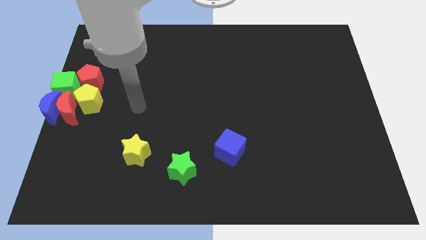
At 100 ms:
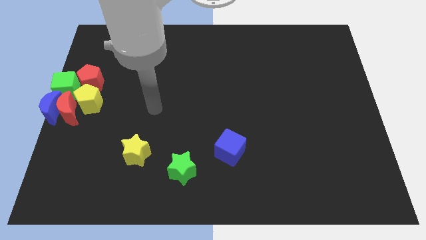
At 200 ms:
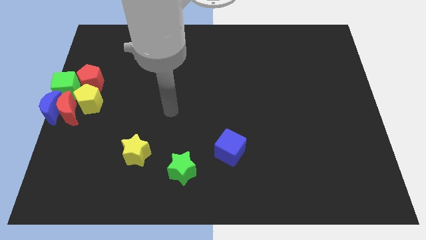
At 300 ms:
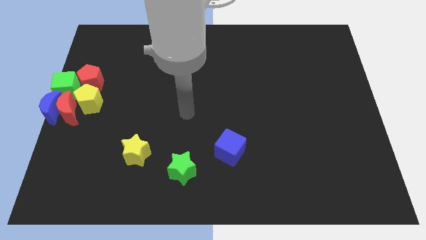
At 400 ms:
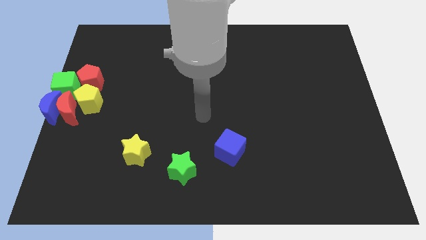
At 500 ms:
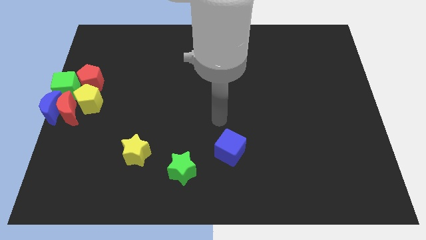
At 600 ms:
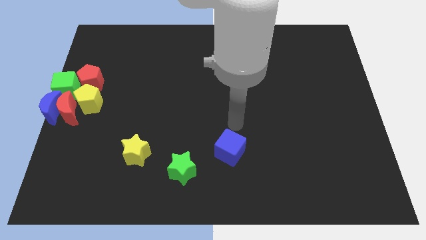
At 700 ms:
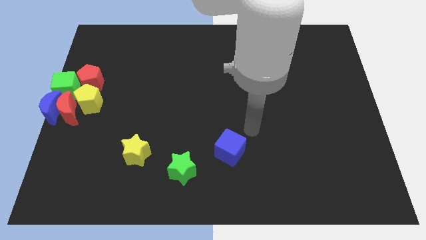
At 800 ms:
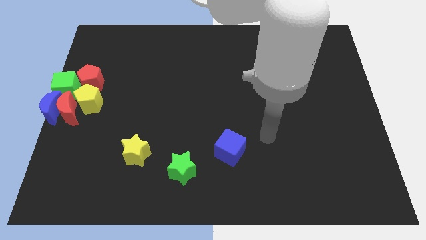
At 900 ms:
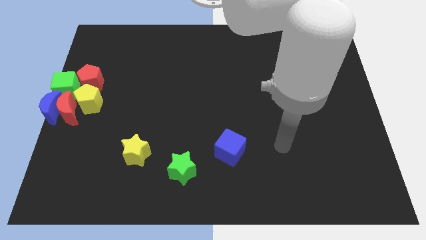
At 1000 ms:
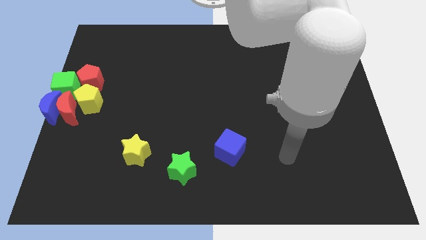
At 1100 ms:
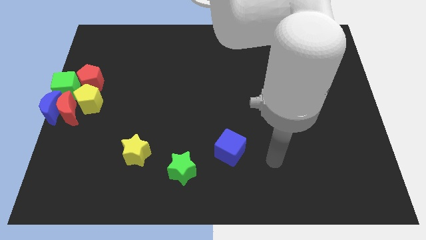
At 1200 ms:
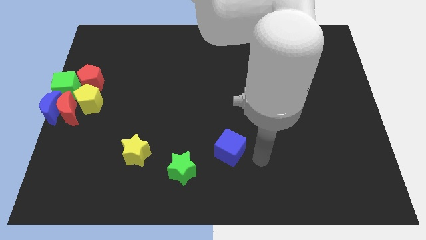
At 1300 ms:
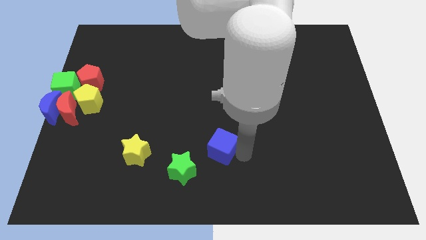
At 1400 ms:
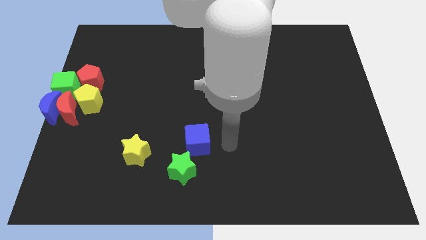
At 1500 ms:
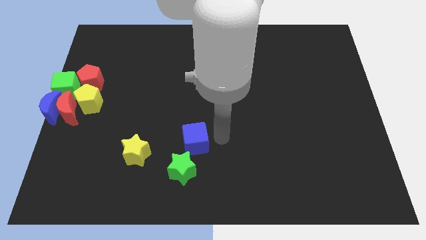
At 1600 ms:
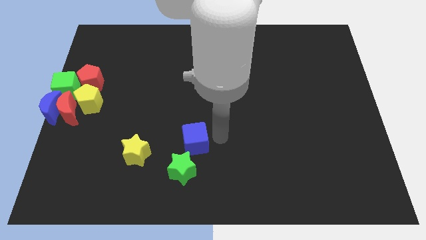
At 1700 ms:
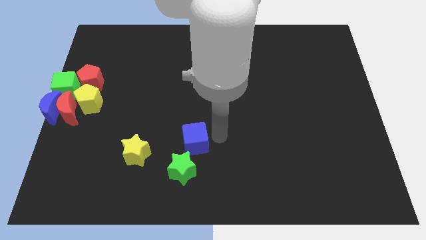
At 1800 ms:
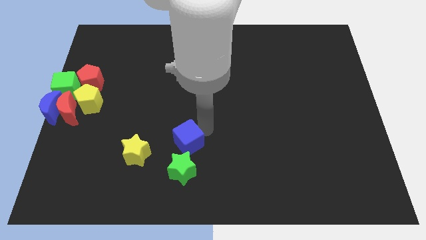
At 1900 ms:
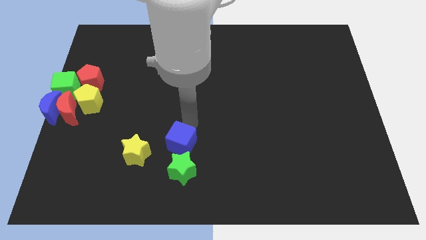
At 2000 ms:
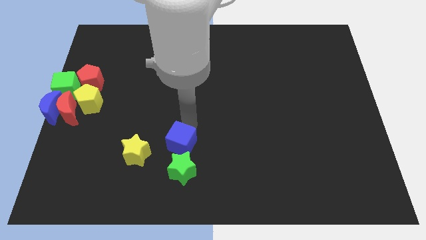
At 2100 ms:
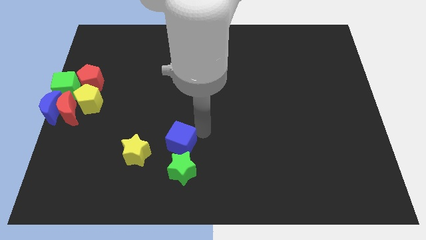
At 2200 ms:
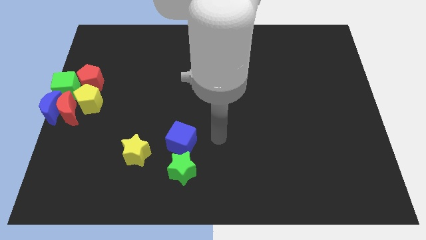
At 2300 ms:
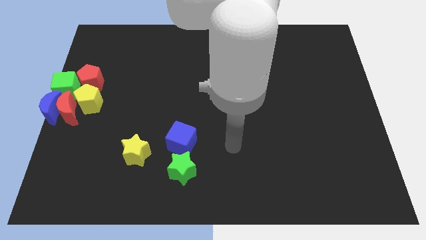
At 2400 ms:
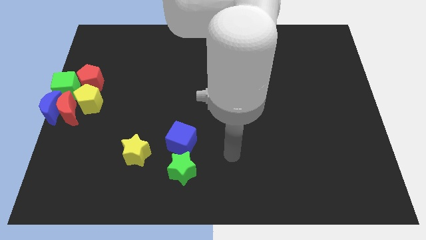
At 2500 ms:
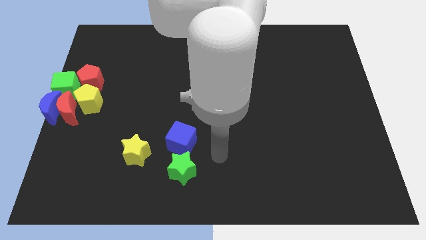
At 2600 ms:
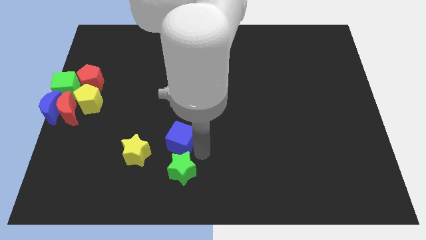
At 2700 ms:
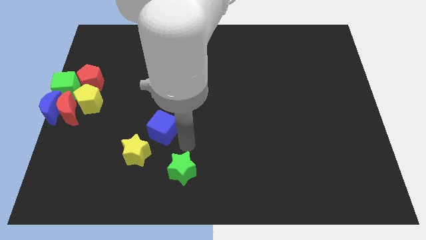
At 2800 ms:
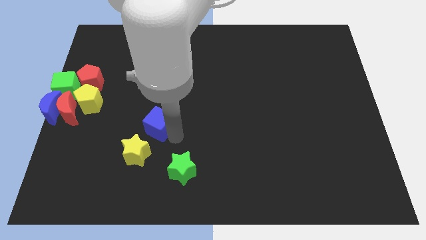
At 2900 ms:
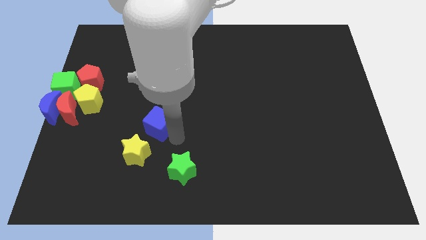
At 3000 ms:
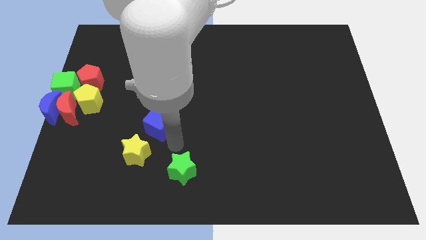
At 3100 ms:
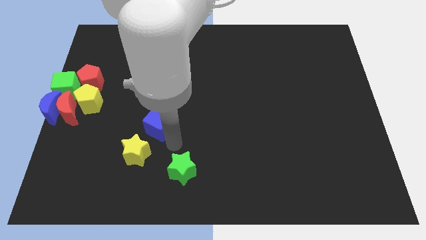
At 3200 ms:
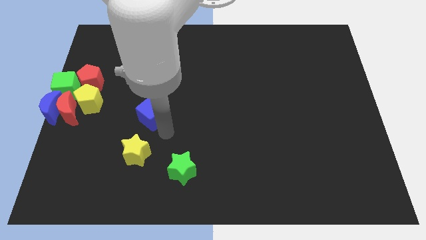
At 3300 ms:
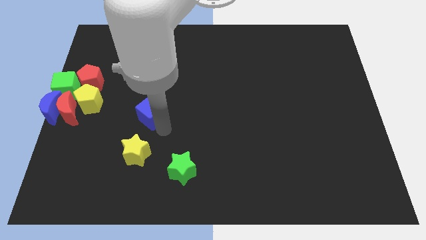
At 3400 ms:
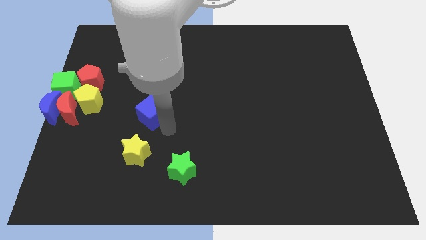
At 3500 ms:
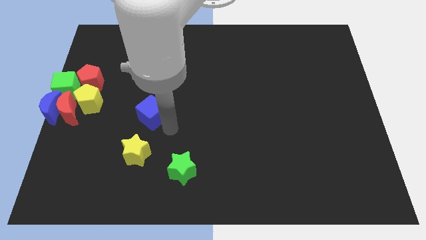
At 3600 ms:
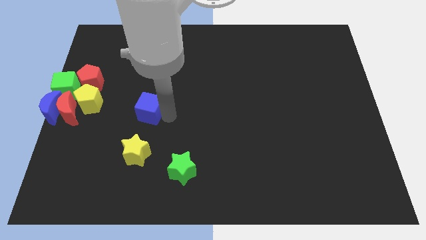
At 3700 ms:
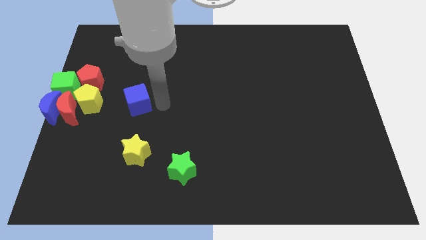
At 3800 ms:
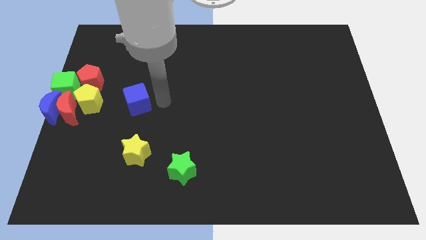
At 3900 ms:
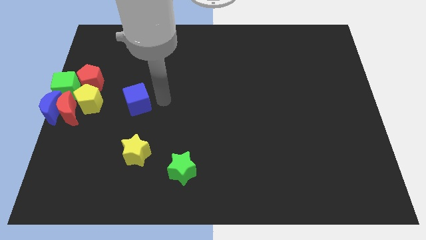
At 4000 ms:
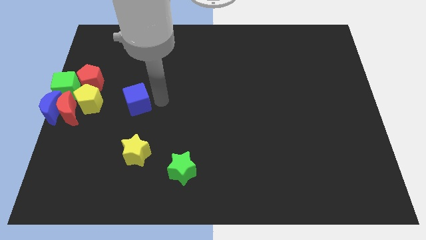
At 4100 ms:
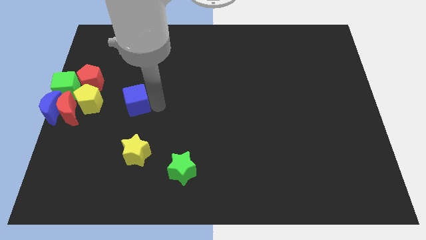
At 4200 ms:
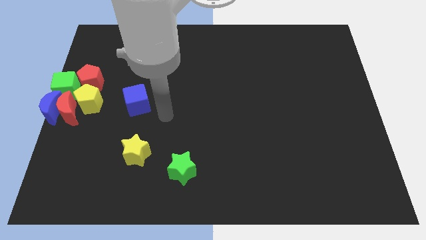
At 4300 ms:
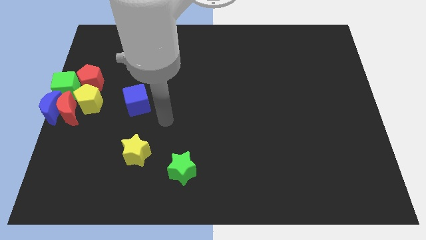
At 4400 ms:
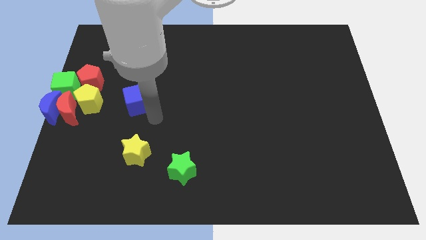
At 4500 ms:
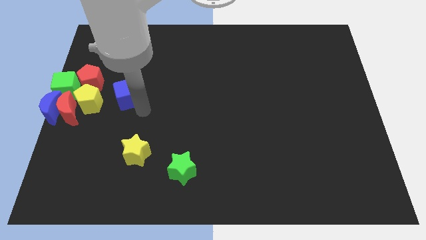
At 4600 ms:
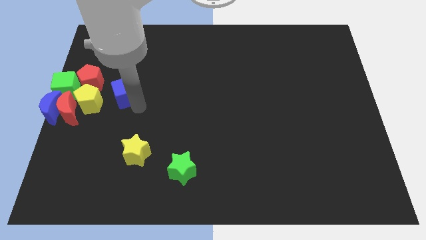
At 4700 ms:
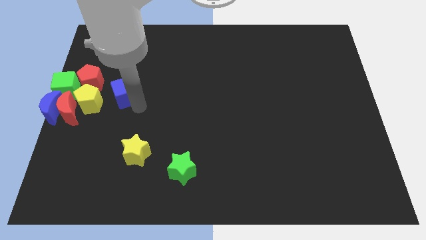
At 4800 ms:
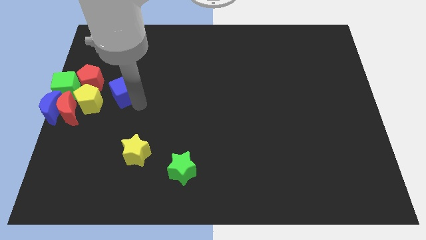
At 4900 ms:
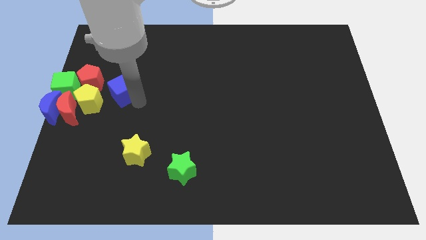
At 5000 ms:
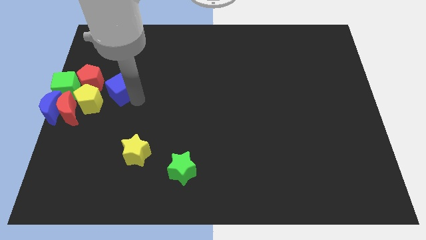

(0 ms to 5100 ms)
move the blue cube to the right of the group of blocks

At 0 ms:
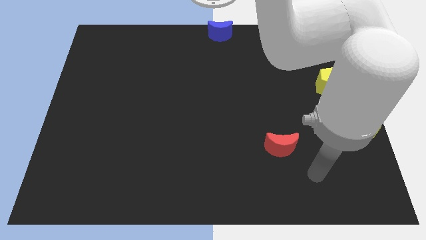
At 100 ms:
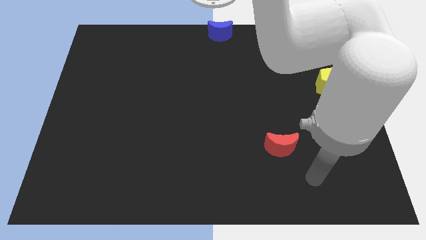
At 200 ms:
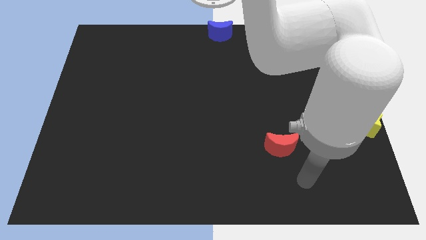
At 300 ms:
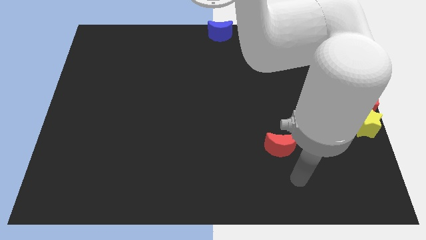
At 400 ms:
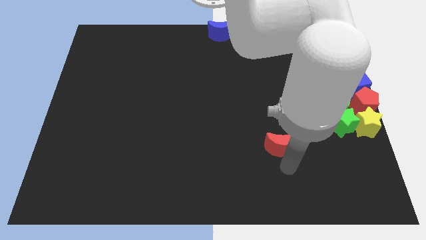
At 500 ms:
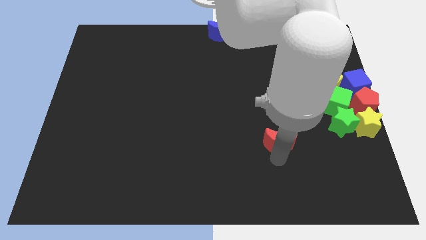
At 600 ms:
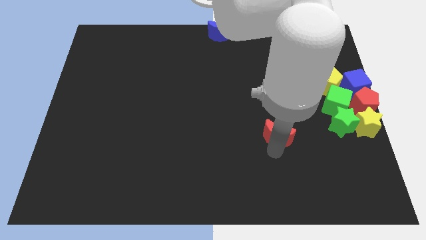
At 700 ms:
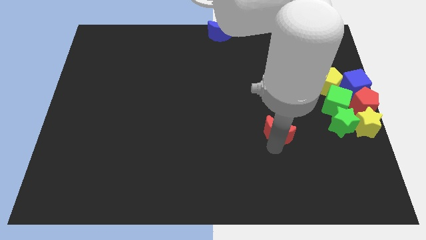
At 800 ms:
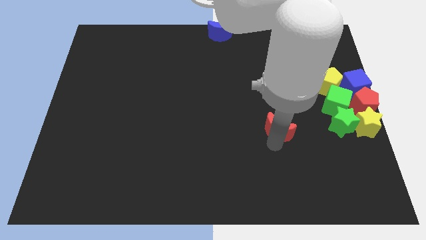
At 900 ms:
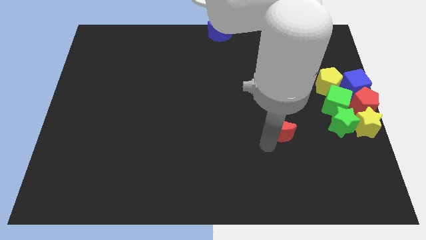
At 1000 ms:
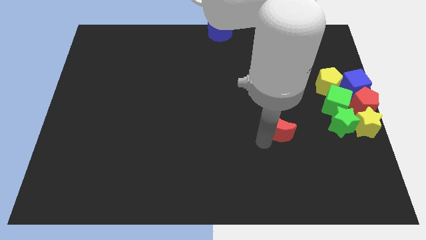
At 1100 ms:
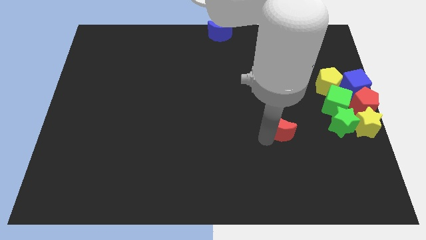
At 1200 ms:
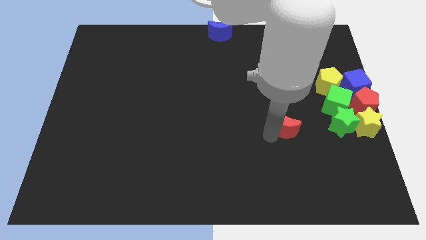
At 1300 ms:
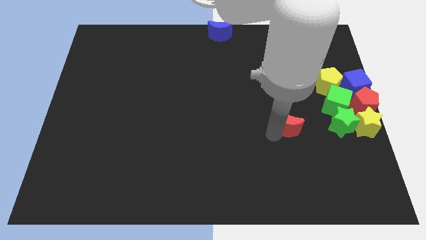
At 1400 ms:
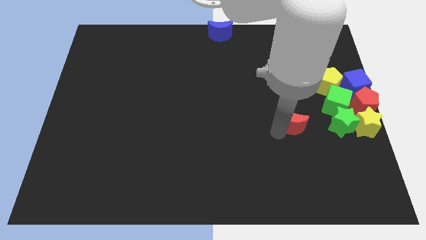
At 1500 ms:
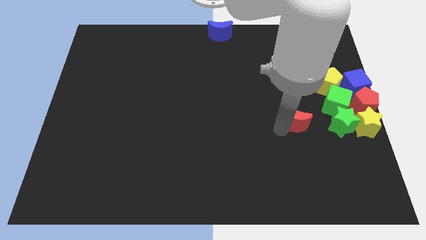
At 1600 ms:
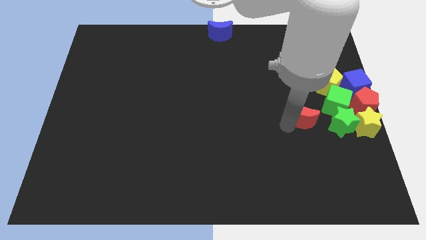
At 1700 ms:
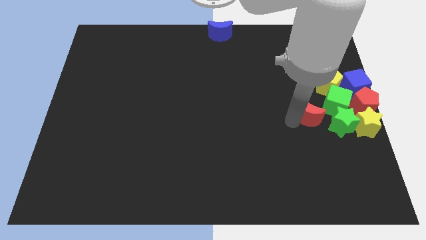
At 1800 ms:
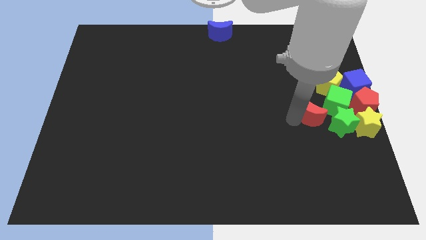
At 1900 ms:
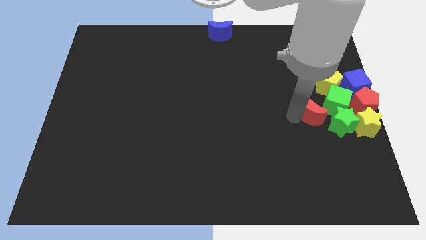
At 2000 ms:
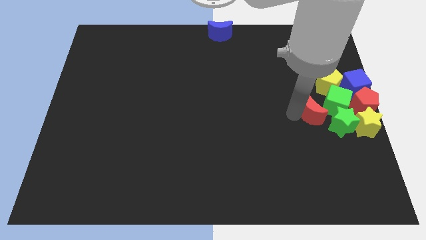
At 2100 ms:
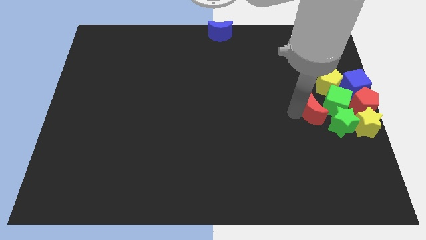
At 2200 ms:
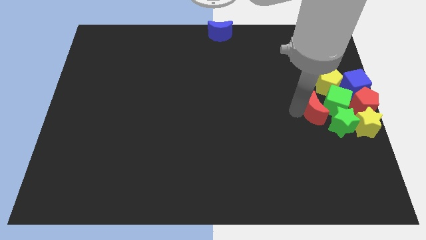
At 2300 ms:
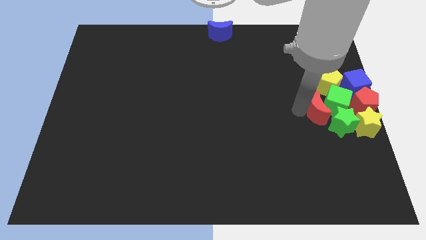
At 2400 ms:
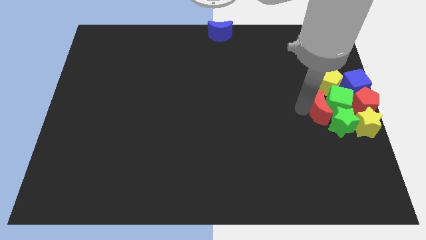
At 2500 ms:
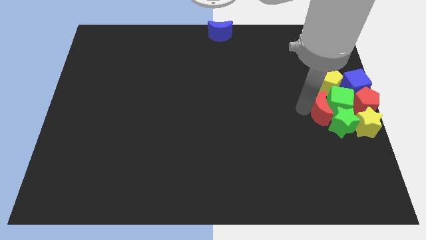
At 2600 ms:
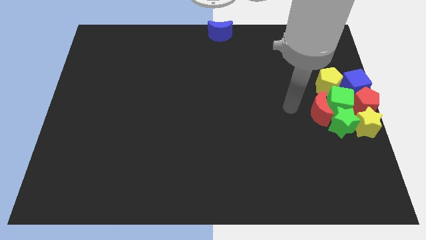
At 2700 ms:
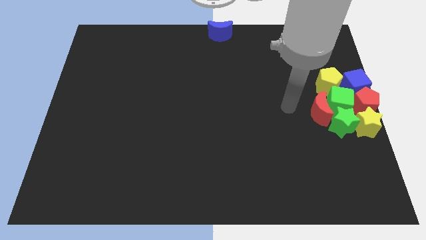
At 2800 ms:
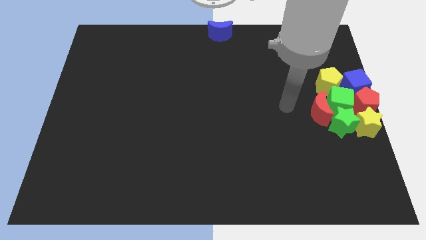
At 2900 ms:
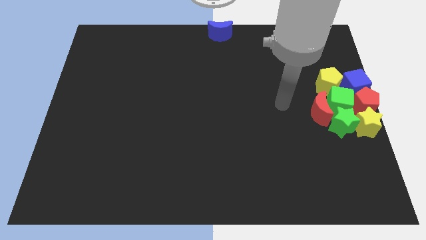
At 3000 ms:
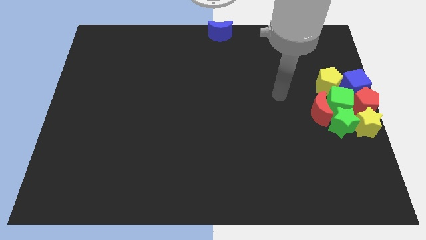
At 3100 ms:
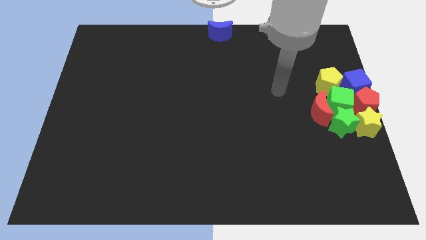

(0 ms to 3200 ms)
push red moon into the group of blocks

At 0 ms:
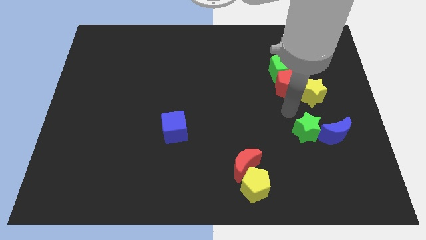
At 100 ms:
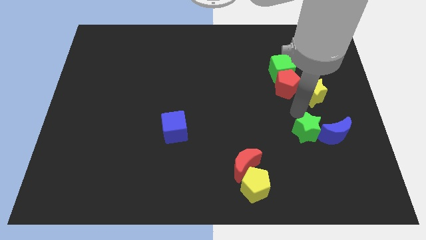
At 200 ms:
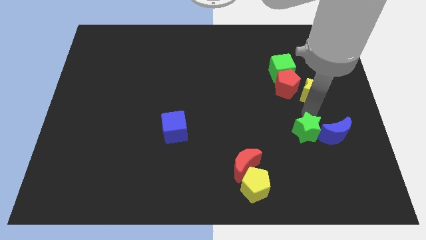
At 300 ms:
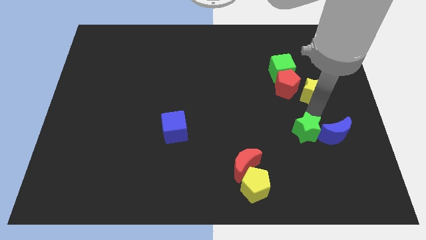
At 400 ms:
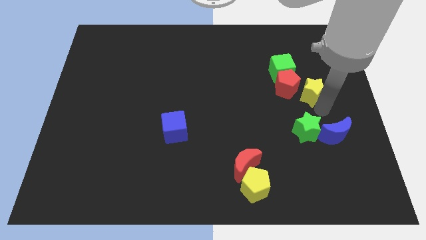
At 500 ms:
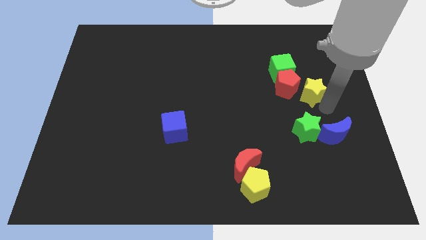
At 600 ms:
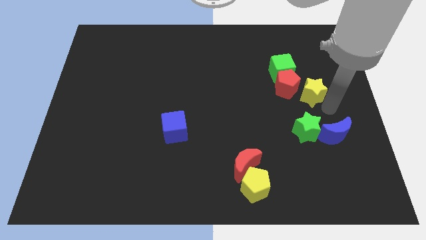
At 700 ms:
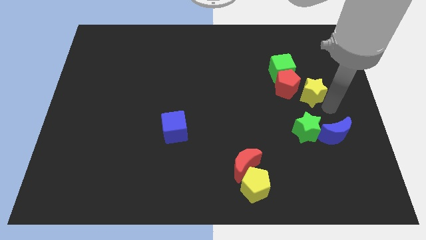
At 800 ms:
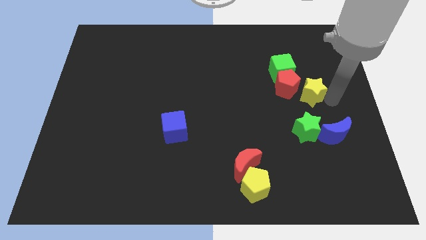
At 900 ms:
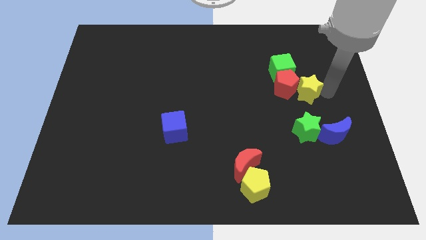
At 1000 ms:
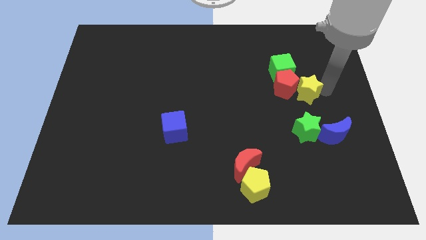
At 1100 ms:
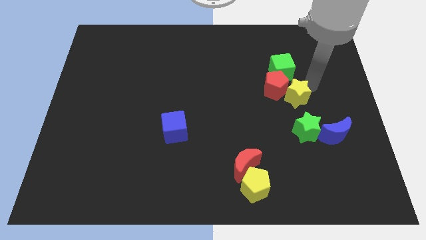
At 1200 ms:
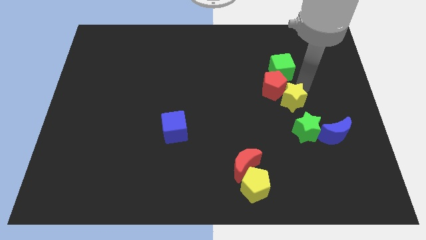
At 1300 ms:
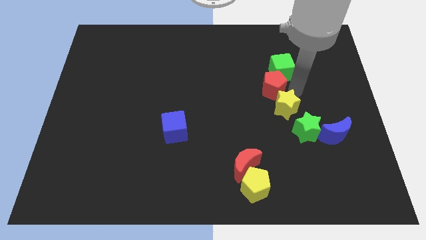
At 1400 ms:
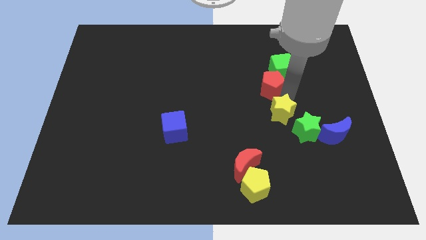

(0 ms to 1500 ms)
place the yellow star to the bottom of the red pentagon
